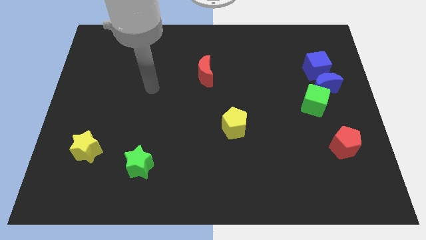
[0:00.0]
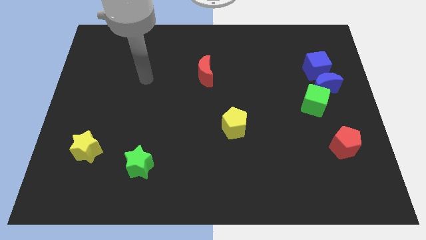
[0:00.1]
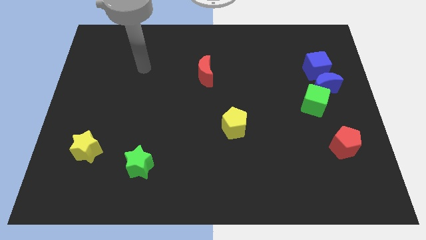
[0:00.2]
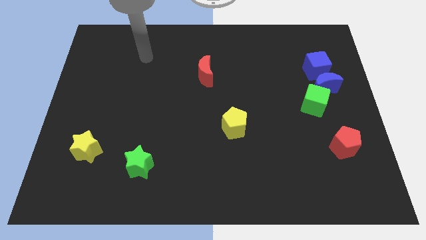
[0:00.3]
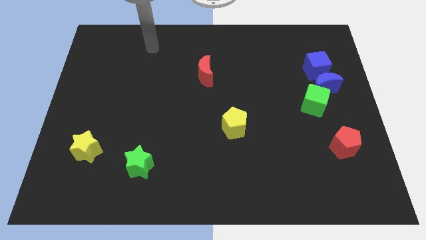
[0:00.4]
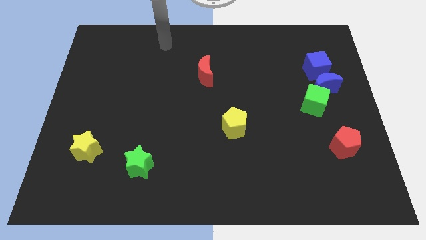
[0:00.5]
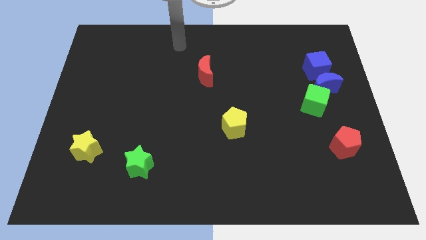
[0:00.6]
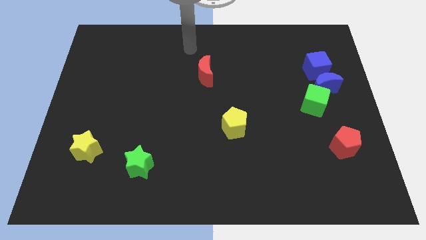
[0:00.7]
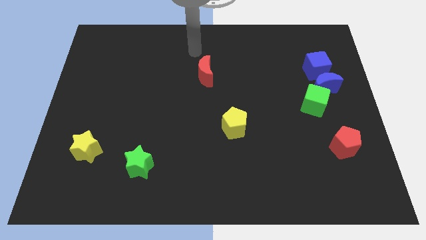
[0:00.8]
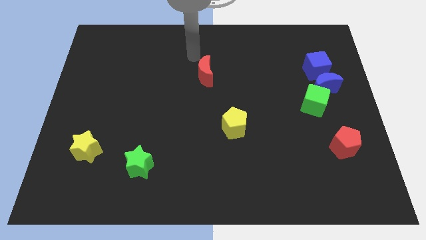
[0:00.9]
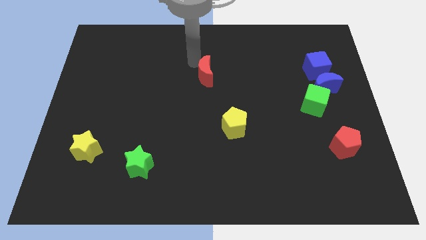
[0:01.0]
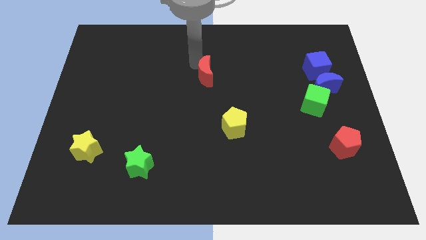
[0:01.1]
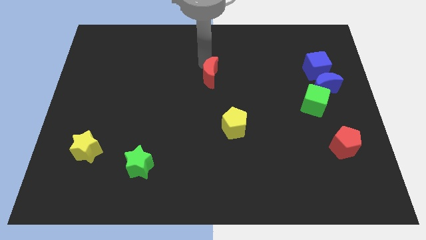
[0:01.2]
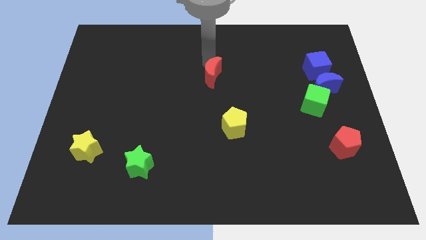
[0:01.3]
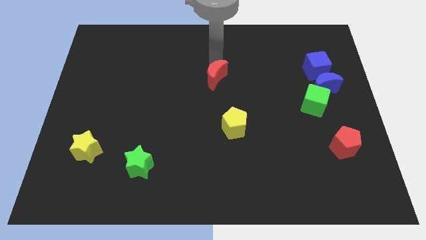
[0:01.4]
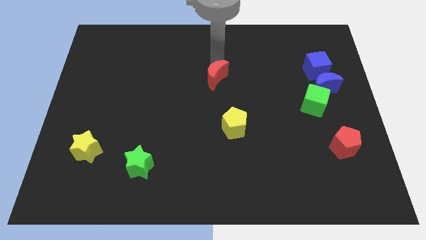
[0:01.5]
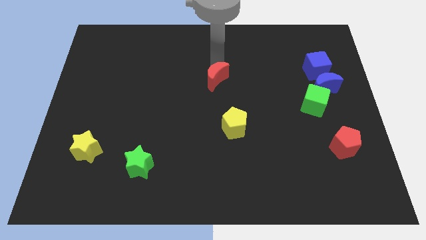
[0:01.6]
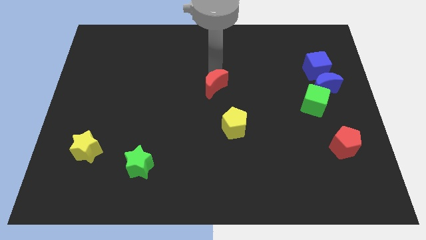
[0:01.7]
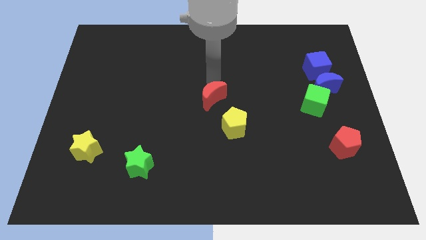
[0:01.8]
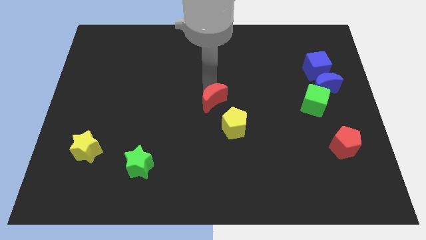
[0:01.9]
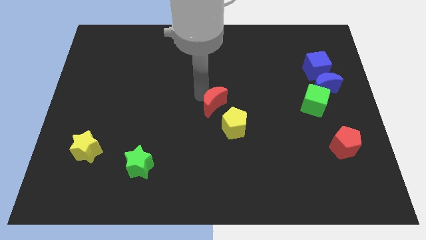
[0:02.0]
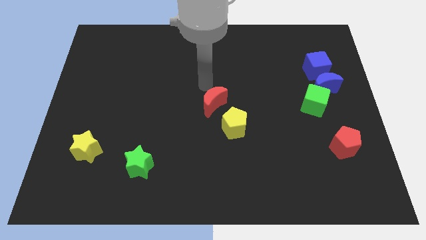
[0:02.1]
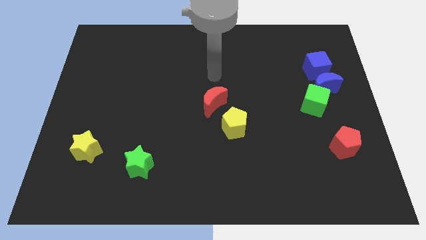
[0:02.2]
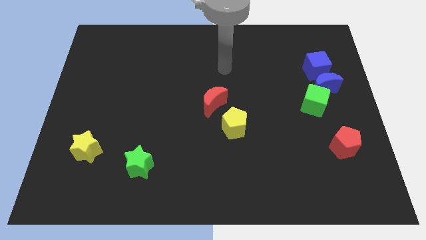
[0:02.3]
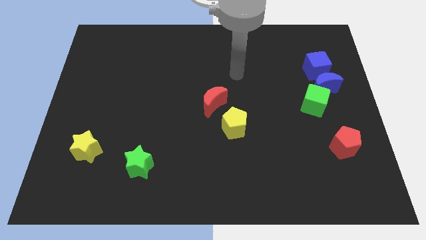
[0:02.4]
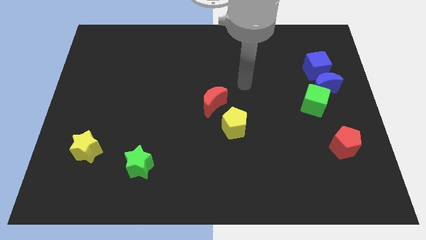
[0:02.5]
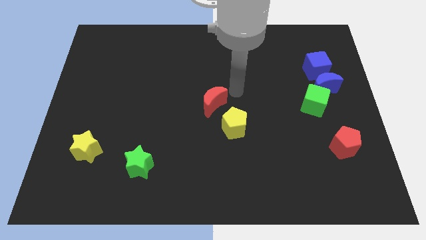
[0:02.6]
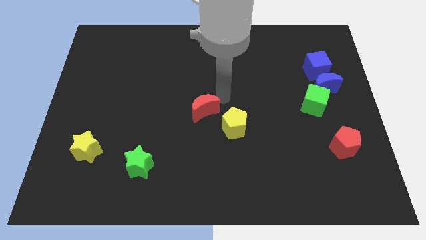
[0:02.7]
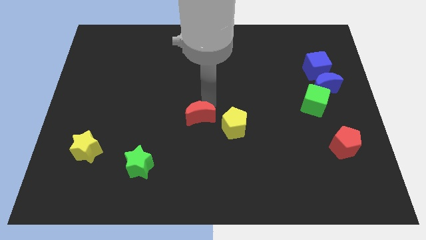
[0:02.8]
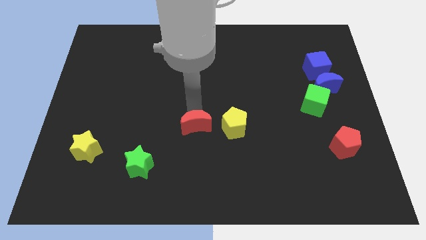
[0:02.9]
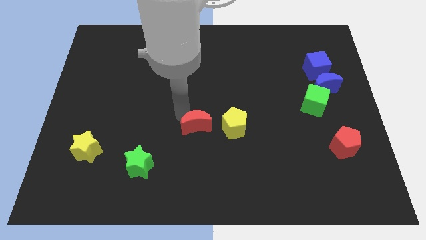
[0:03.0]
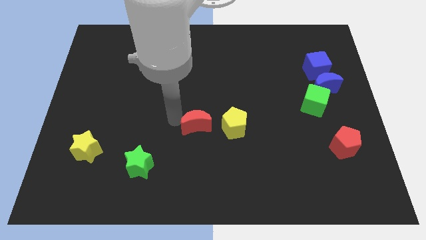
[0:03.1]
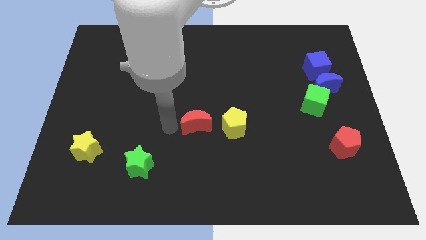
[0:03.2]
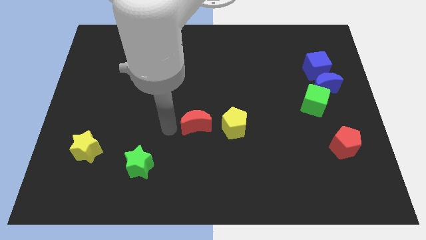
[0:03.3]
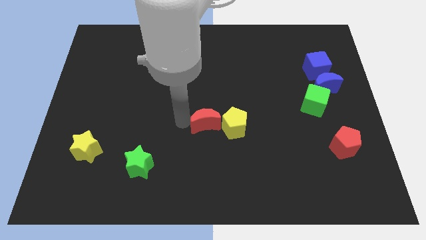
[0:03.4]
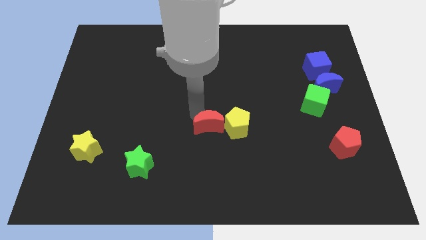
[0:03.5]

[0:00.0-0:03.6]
place the red moon left to the yellow pentagon

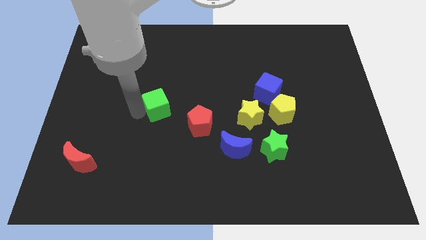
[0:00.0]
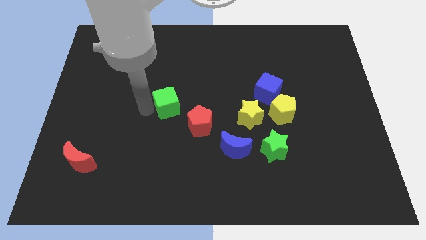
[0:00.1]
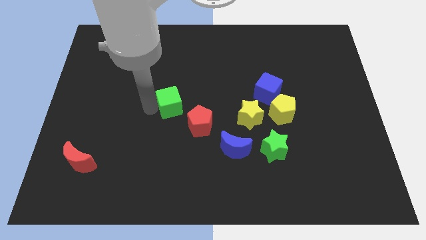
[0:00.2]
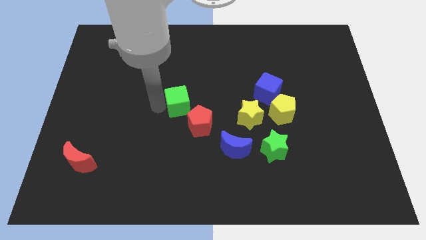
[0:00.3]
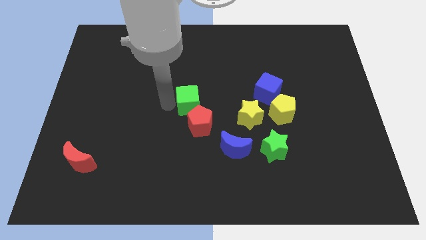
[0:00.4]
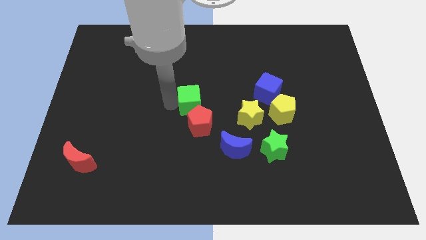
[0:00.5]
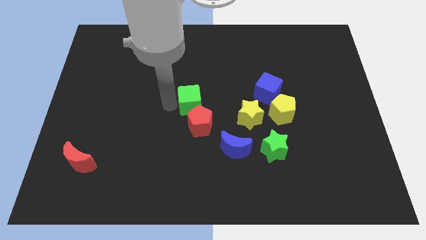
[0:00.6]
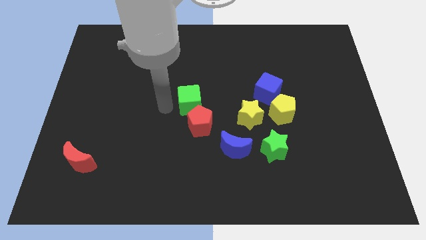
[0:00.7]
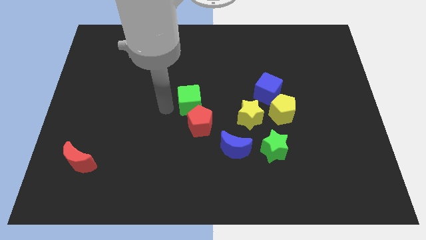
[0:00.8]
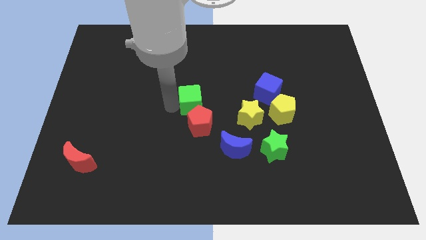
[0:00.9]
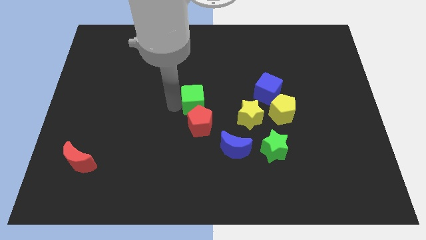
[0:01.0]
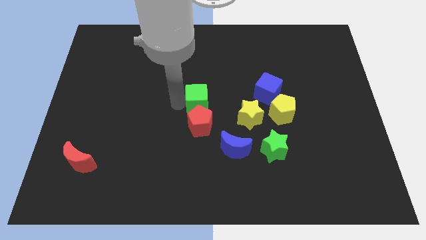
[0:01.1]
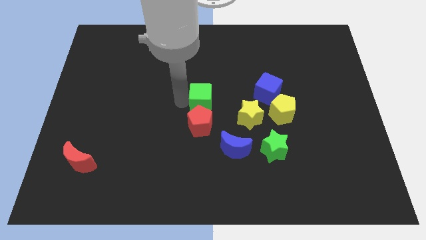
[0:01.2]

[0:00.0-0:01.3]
place the green cube above the red pentagon

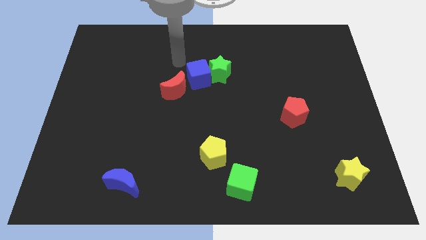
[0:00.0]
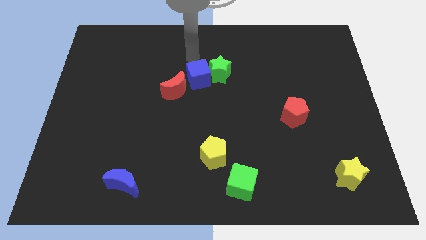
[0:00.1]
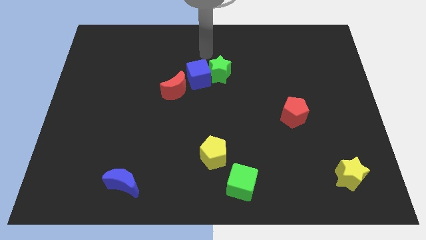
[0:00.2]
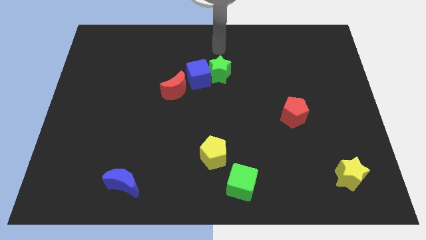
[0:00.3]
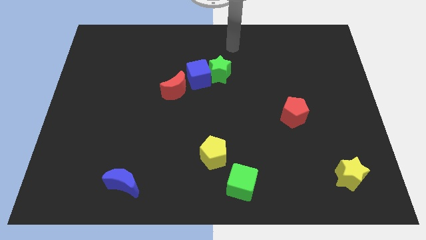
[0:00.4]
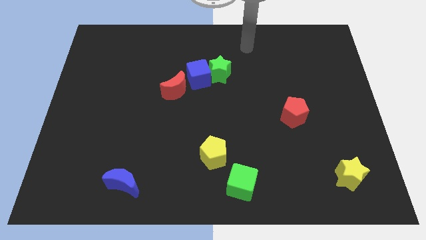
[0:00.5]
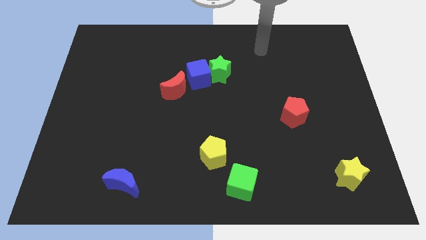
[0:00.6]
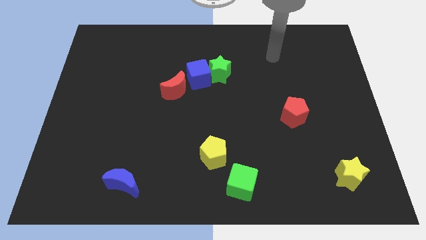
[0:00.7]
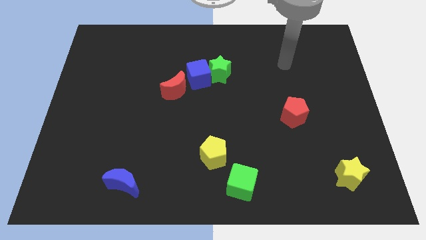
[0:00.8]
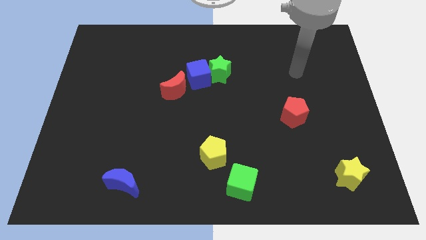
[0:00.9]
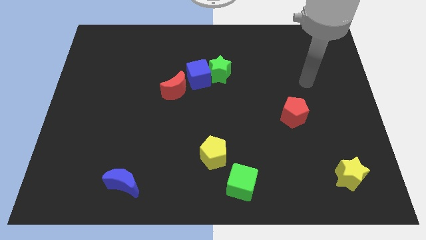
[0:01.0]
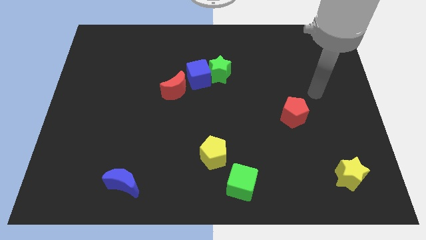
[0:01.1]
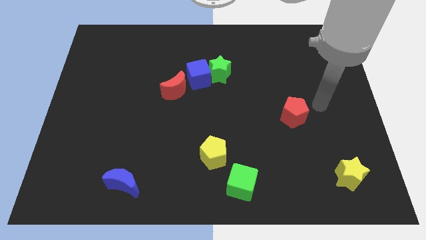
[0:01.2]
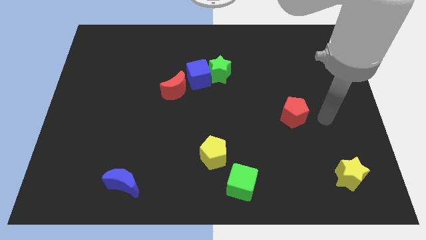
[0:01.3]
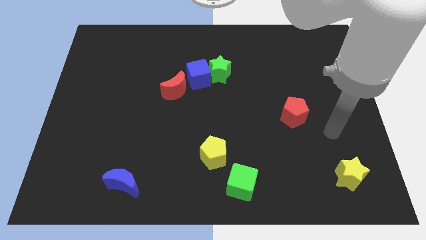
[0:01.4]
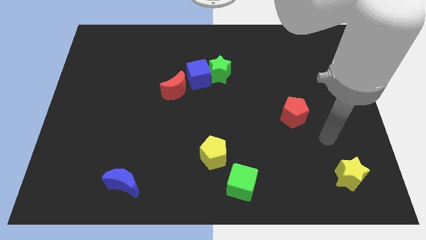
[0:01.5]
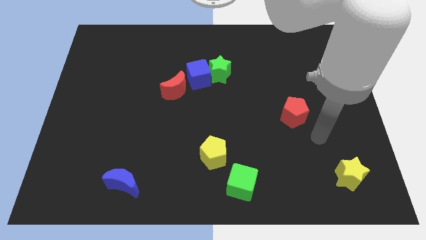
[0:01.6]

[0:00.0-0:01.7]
move your arm around on the board

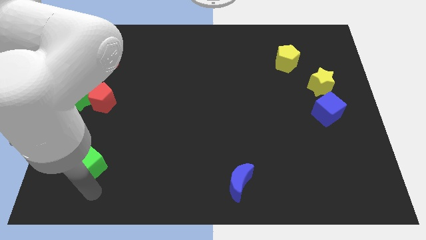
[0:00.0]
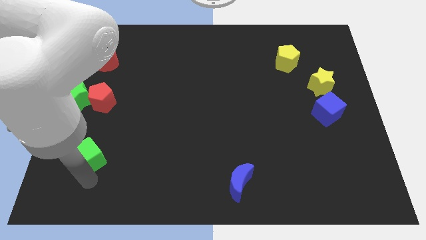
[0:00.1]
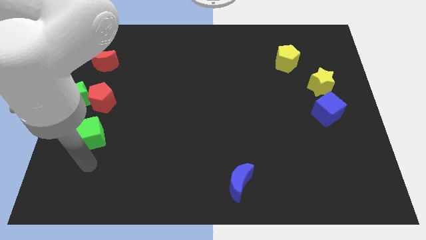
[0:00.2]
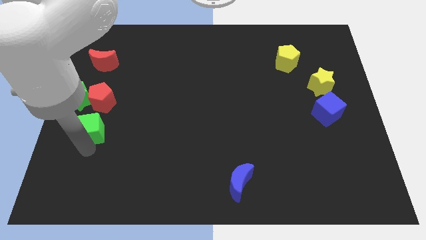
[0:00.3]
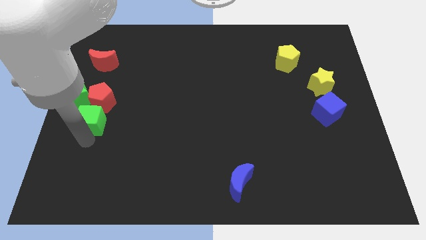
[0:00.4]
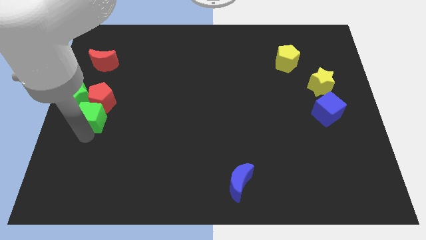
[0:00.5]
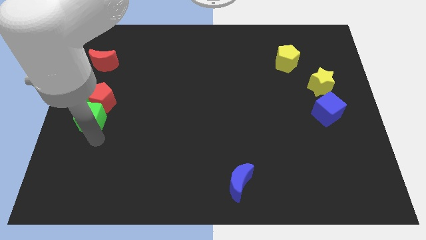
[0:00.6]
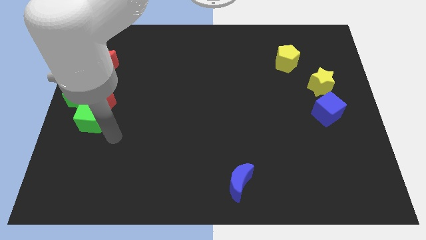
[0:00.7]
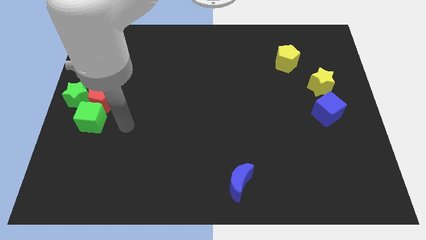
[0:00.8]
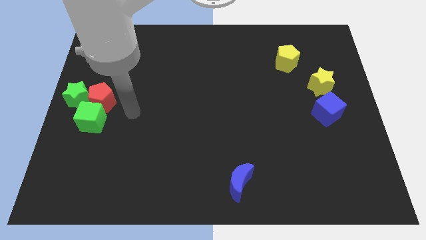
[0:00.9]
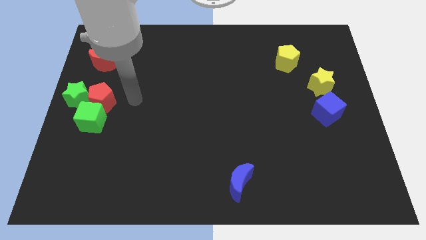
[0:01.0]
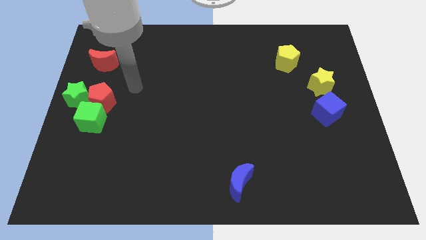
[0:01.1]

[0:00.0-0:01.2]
move the green cube to the bottom side of the red pentagon and green star

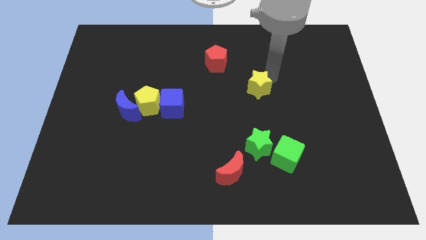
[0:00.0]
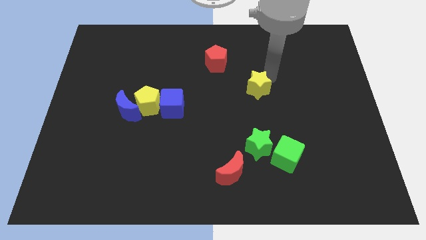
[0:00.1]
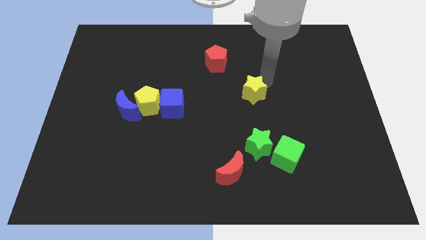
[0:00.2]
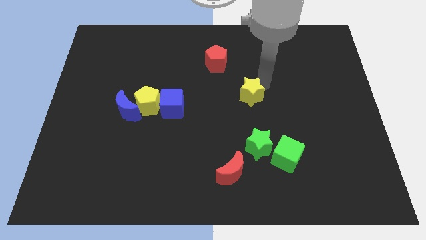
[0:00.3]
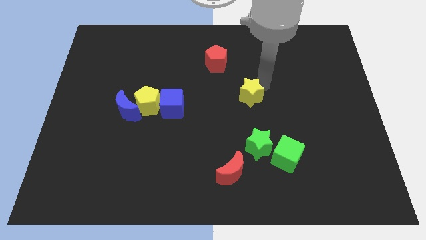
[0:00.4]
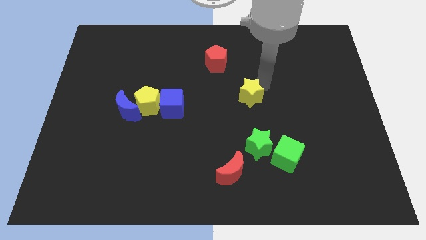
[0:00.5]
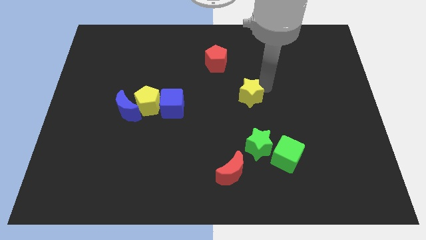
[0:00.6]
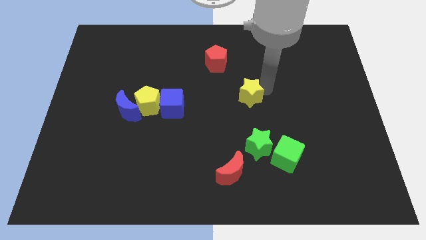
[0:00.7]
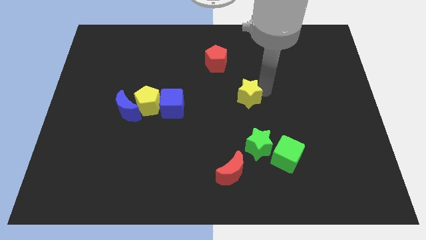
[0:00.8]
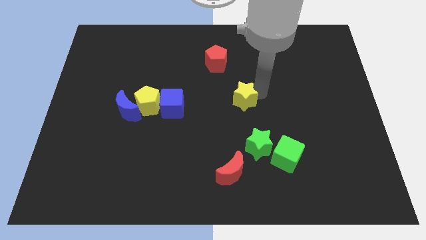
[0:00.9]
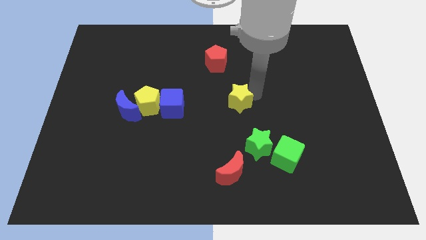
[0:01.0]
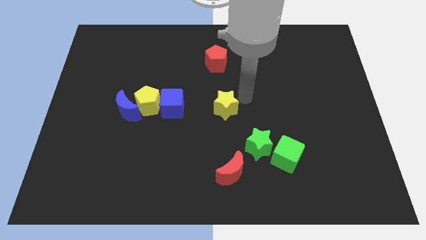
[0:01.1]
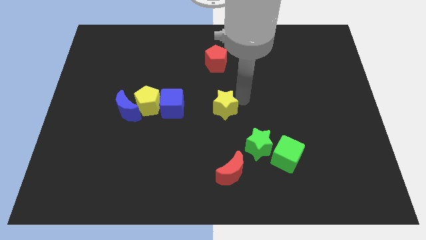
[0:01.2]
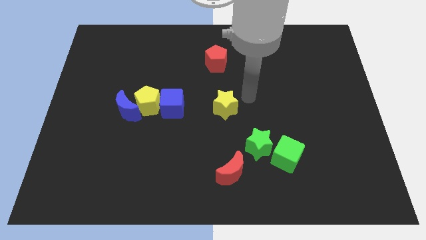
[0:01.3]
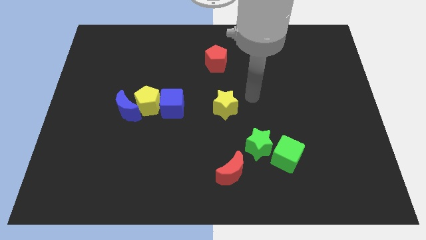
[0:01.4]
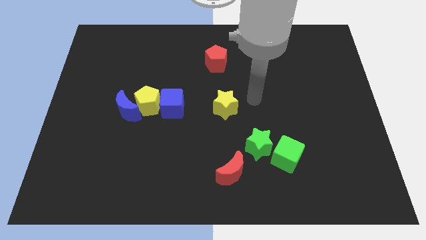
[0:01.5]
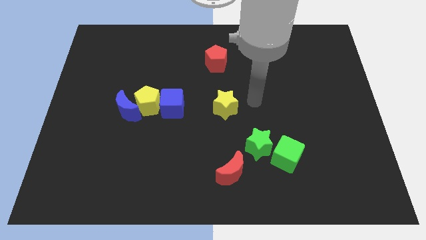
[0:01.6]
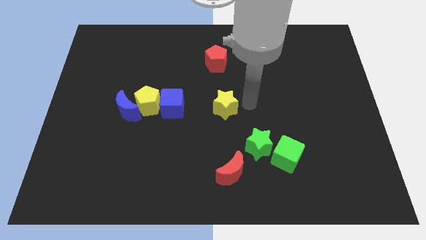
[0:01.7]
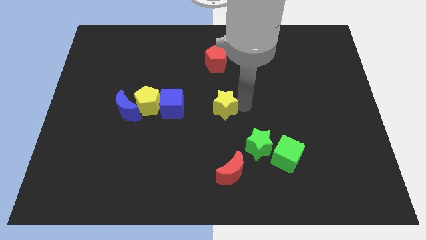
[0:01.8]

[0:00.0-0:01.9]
place the yellow star in between the red crescent and red pentagon
